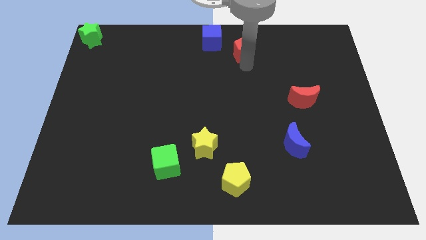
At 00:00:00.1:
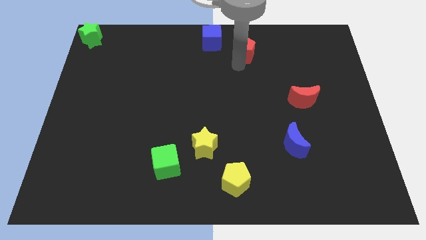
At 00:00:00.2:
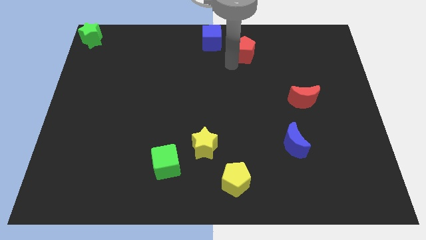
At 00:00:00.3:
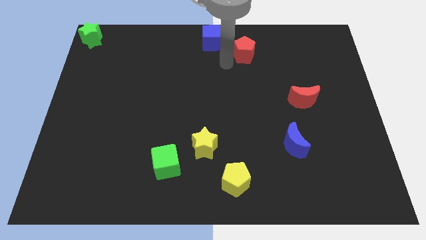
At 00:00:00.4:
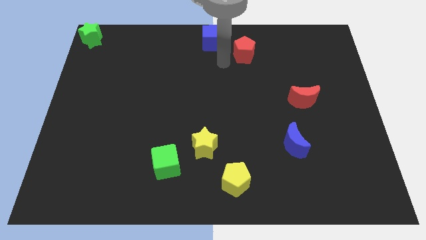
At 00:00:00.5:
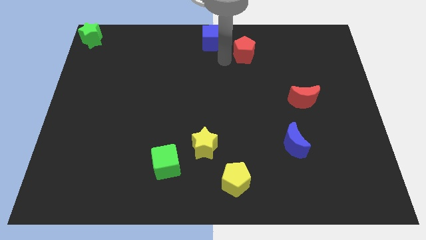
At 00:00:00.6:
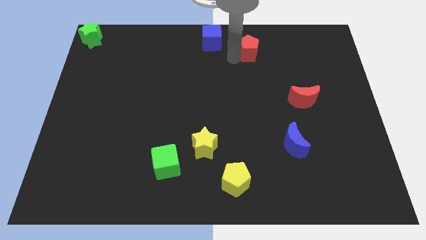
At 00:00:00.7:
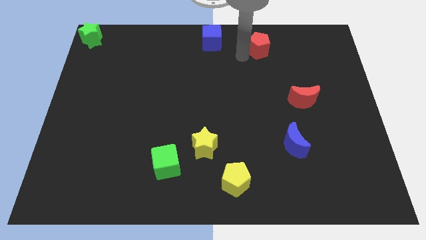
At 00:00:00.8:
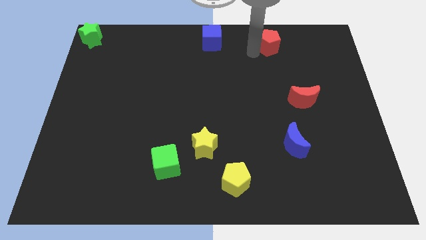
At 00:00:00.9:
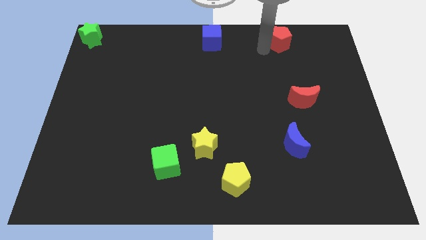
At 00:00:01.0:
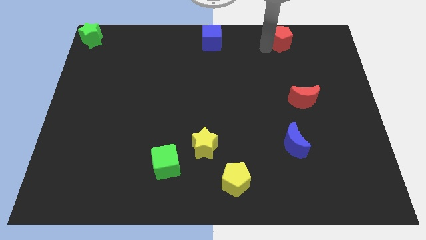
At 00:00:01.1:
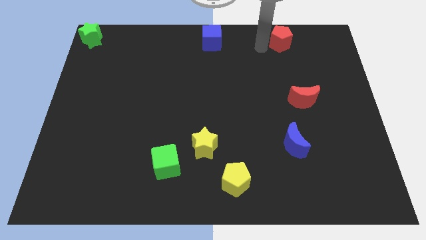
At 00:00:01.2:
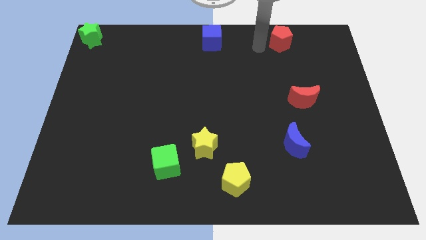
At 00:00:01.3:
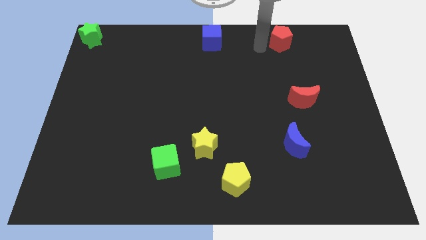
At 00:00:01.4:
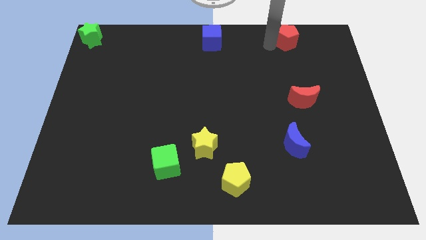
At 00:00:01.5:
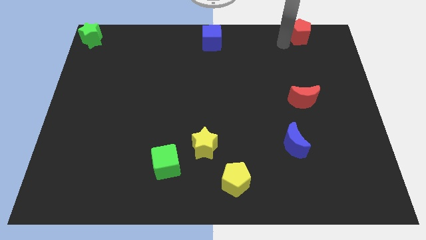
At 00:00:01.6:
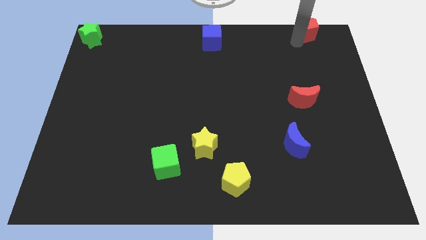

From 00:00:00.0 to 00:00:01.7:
move the red pentagon to the top right

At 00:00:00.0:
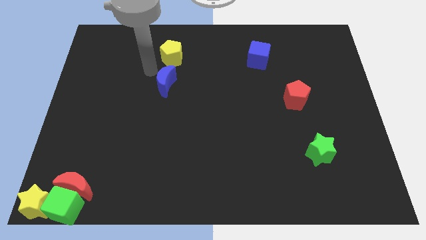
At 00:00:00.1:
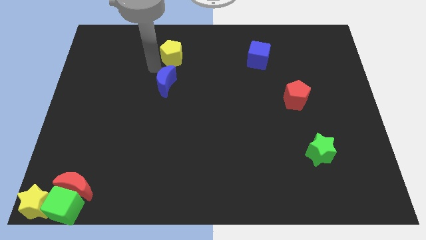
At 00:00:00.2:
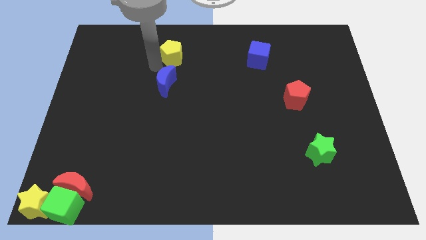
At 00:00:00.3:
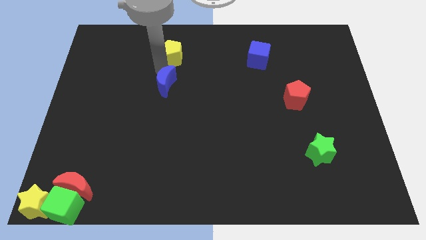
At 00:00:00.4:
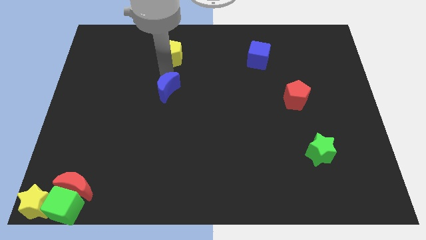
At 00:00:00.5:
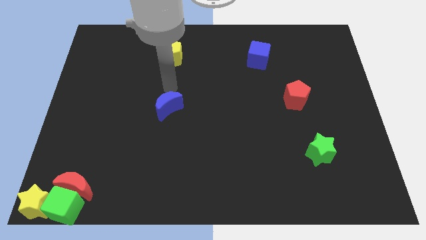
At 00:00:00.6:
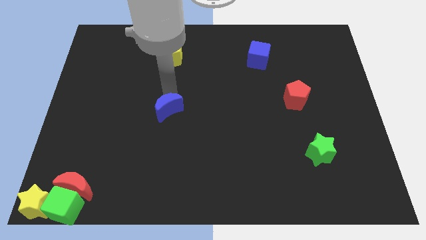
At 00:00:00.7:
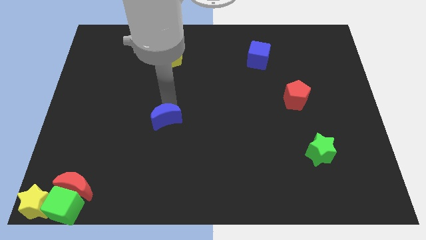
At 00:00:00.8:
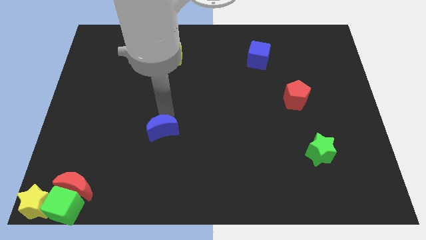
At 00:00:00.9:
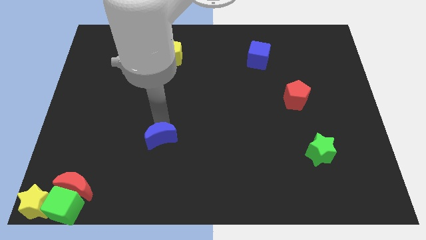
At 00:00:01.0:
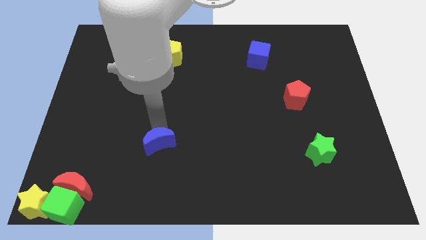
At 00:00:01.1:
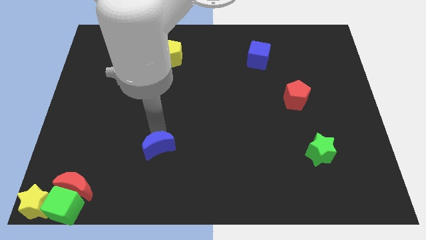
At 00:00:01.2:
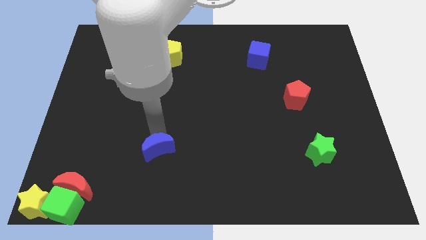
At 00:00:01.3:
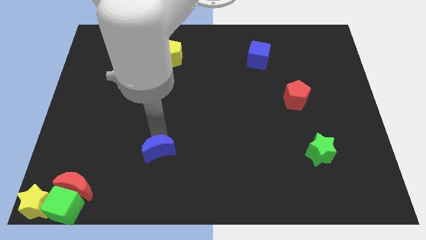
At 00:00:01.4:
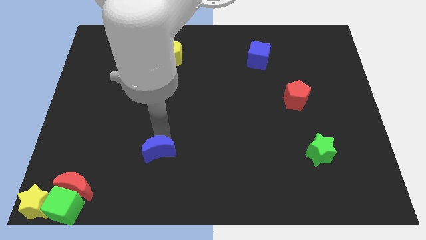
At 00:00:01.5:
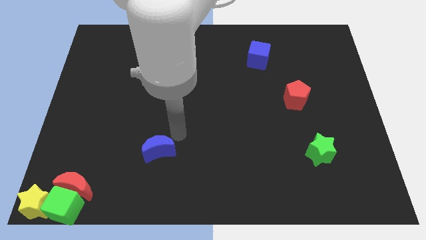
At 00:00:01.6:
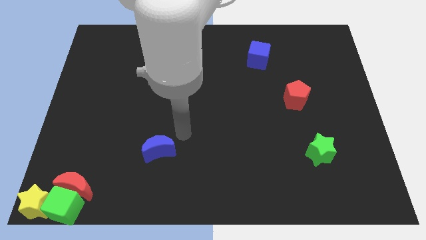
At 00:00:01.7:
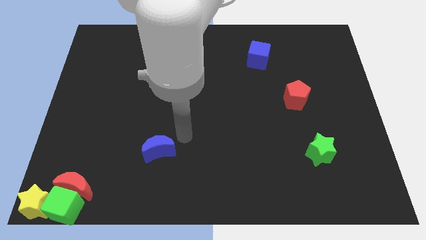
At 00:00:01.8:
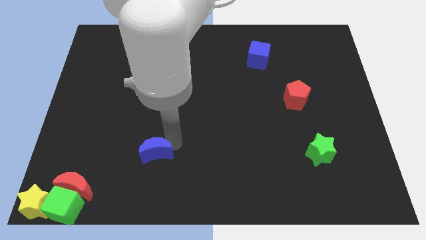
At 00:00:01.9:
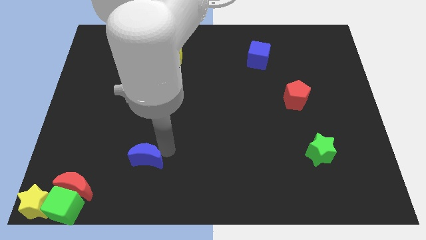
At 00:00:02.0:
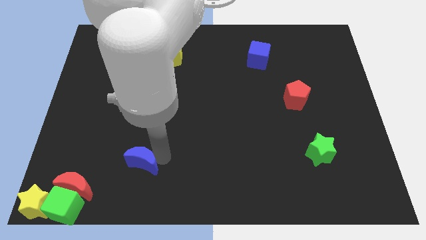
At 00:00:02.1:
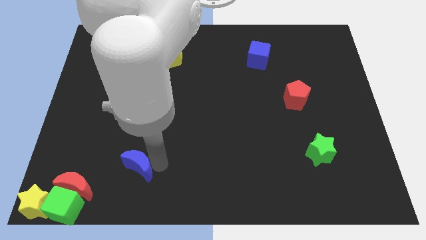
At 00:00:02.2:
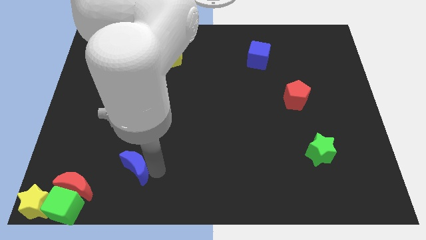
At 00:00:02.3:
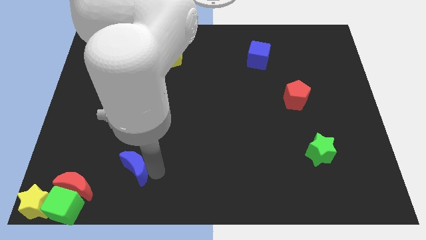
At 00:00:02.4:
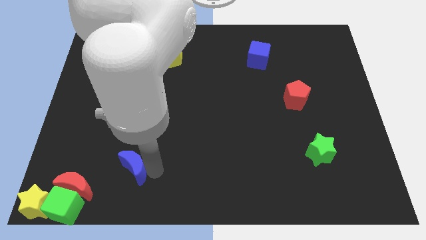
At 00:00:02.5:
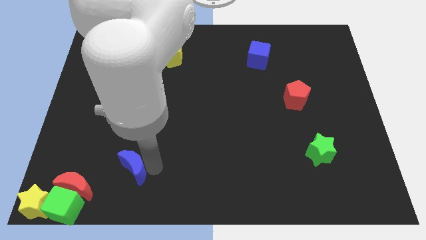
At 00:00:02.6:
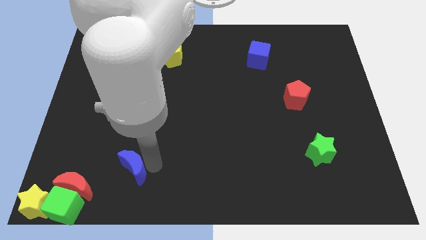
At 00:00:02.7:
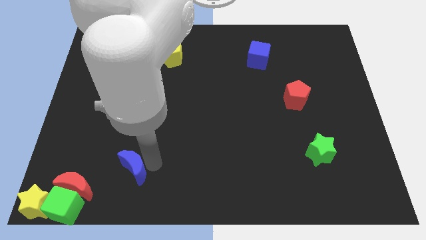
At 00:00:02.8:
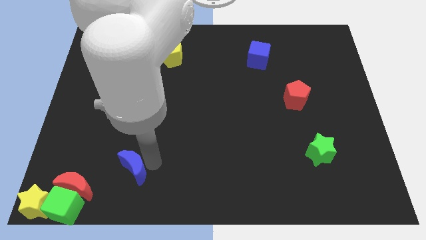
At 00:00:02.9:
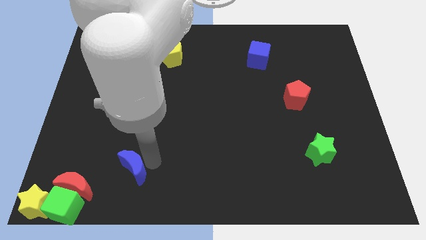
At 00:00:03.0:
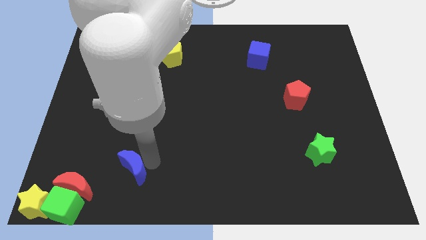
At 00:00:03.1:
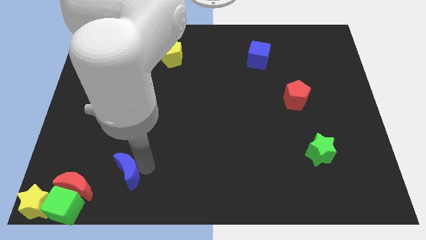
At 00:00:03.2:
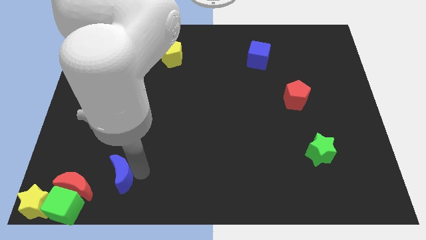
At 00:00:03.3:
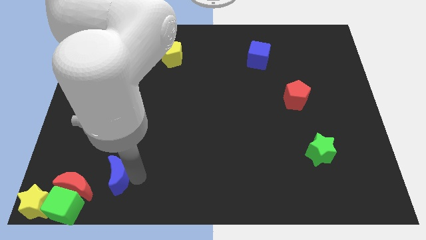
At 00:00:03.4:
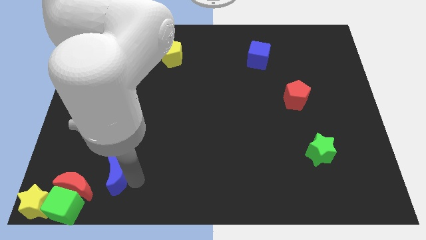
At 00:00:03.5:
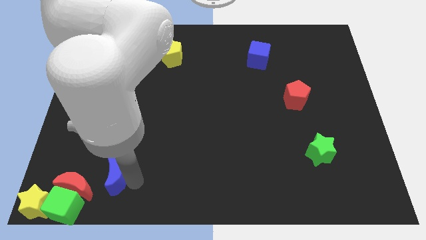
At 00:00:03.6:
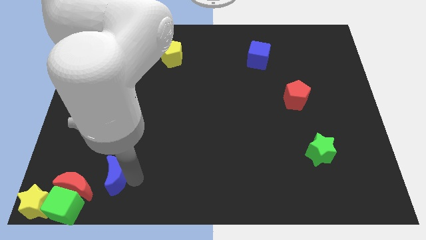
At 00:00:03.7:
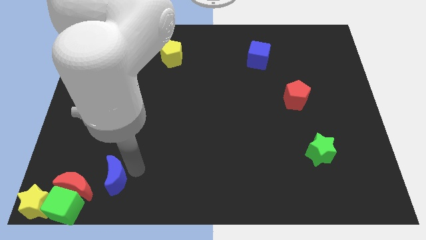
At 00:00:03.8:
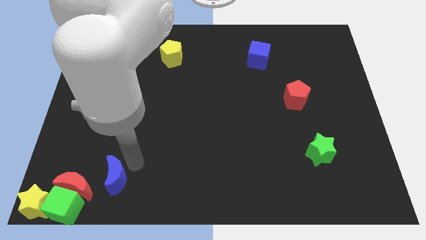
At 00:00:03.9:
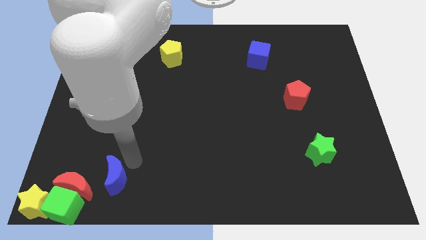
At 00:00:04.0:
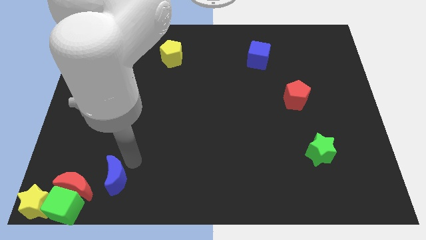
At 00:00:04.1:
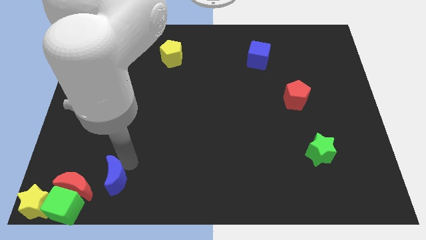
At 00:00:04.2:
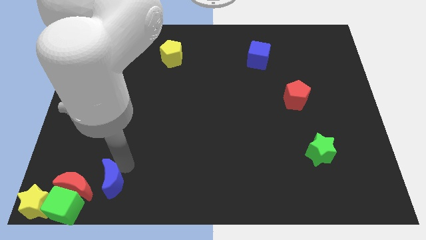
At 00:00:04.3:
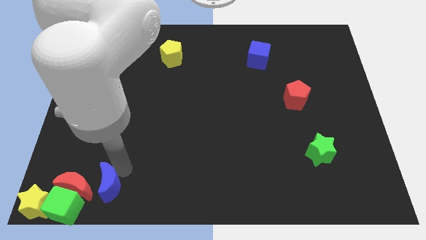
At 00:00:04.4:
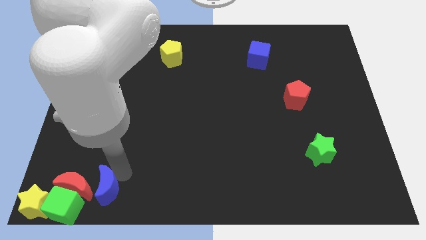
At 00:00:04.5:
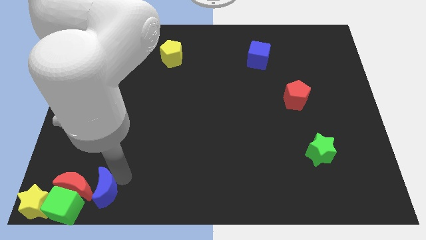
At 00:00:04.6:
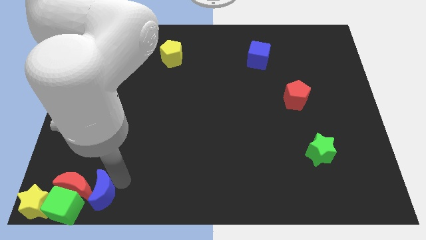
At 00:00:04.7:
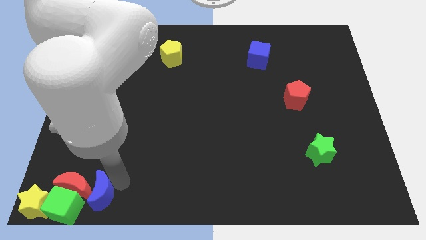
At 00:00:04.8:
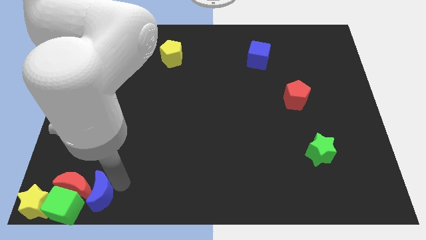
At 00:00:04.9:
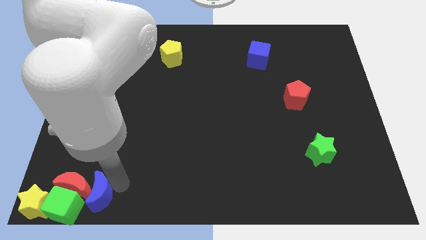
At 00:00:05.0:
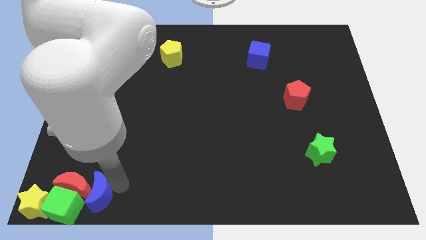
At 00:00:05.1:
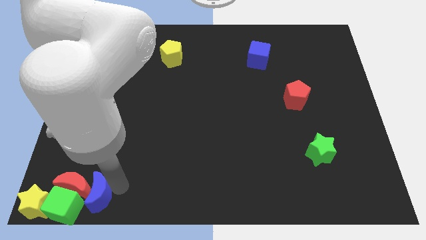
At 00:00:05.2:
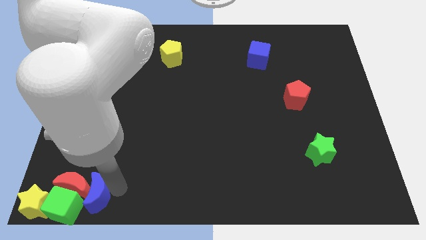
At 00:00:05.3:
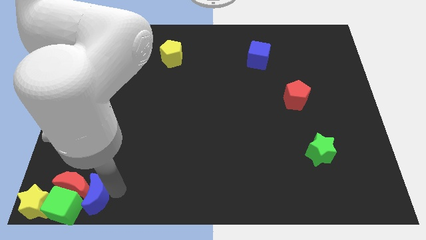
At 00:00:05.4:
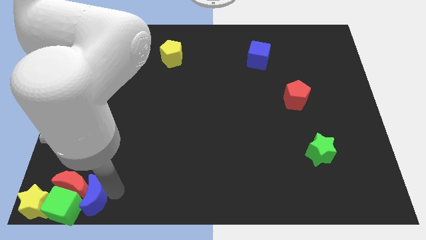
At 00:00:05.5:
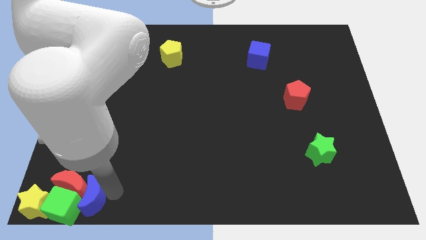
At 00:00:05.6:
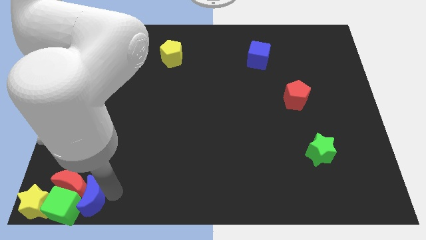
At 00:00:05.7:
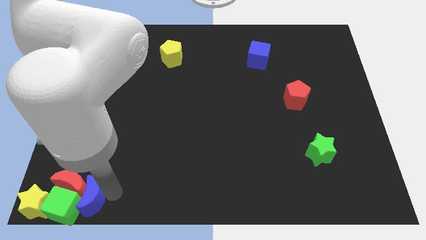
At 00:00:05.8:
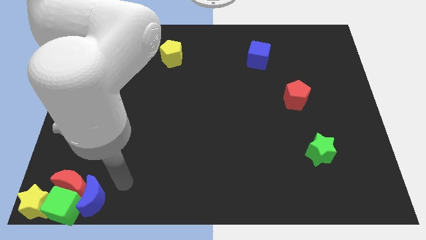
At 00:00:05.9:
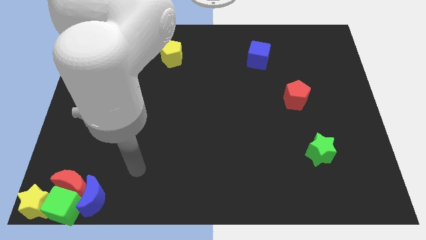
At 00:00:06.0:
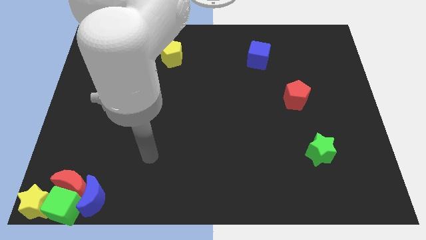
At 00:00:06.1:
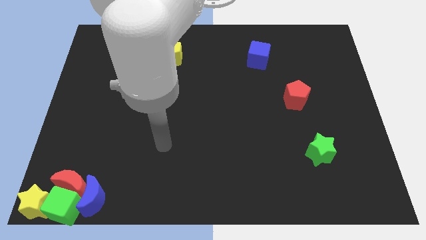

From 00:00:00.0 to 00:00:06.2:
push the blue crescent into the red crescent and green cube

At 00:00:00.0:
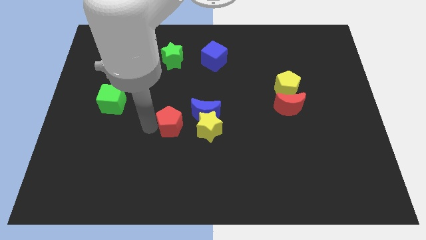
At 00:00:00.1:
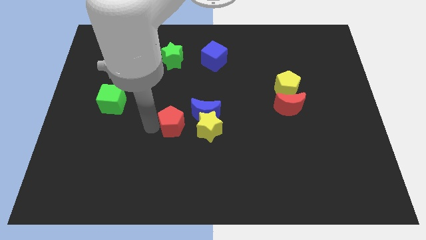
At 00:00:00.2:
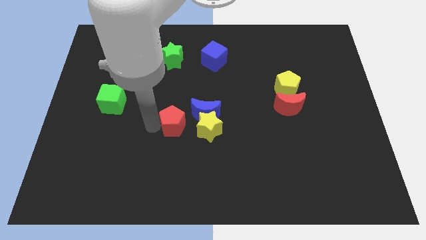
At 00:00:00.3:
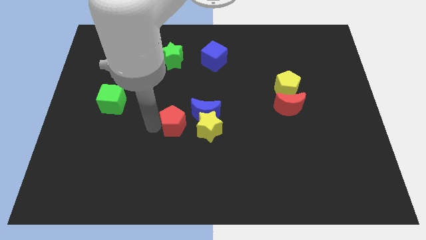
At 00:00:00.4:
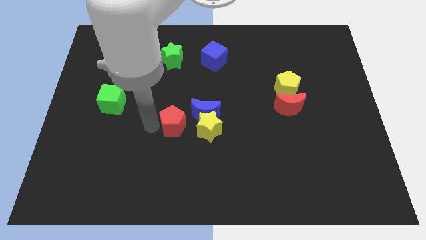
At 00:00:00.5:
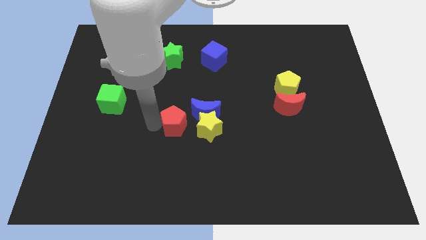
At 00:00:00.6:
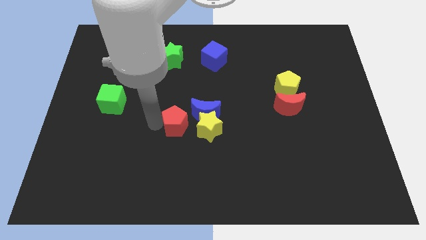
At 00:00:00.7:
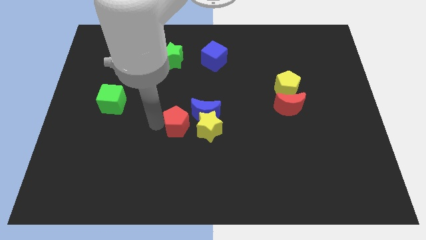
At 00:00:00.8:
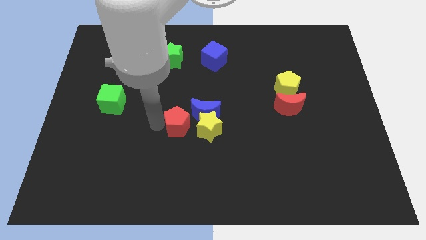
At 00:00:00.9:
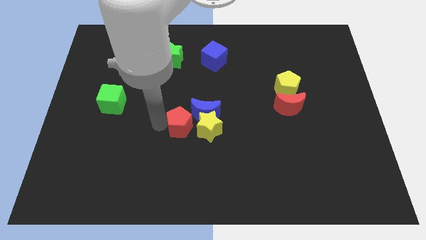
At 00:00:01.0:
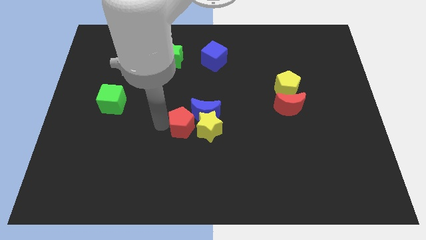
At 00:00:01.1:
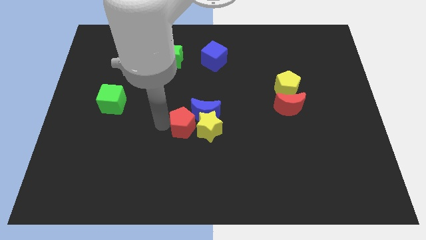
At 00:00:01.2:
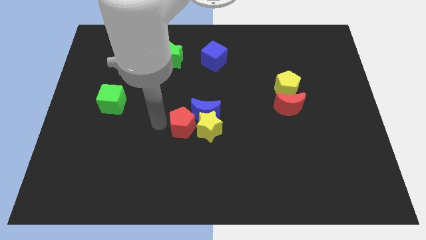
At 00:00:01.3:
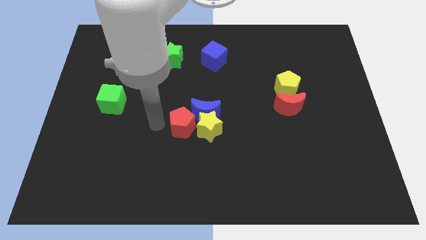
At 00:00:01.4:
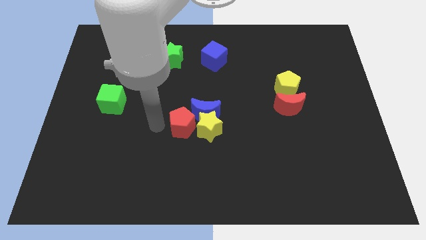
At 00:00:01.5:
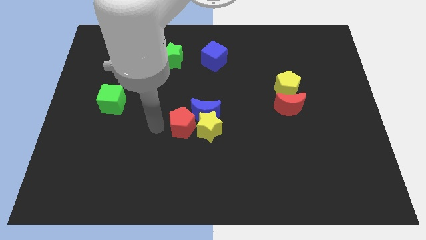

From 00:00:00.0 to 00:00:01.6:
move the red pentagon to the left to the yellow star
